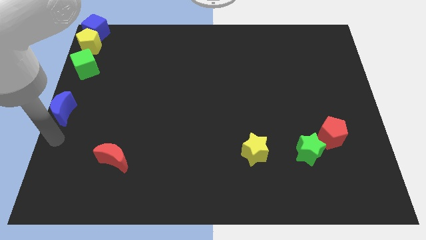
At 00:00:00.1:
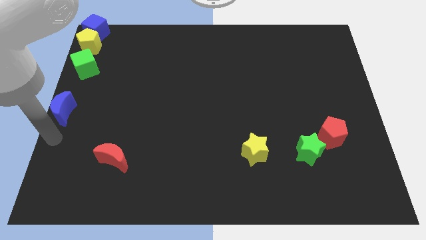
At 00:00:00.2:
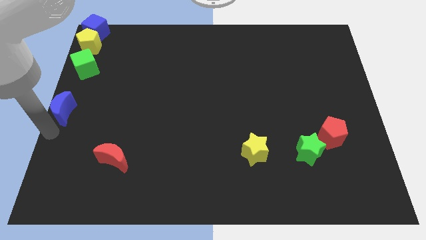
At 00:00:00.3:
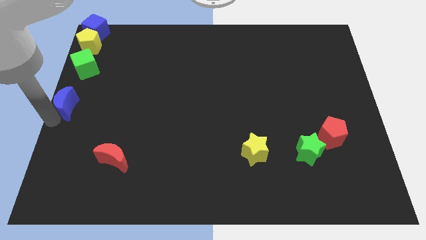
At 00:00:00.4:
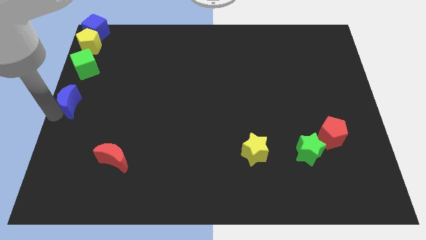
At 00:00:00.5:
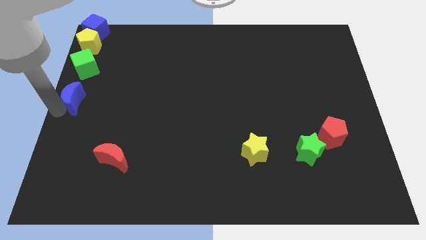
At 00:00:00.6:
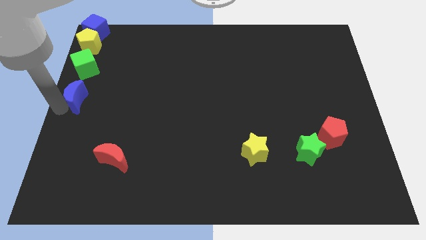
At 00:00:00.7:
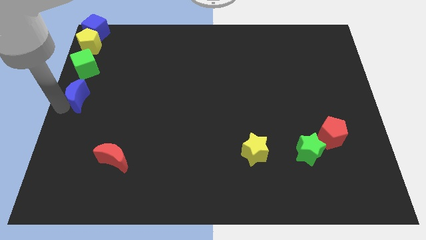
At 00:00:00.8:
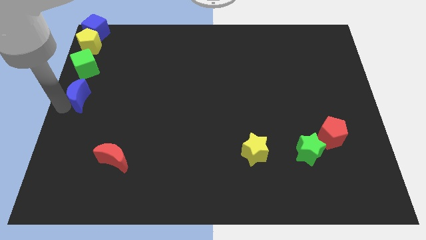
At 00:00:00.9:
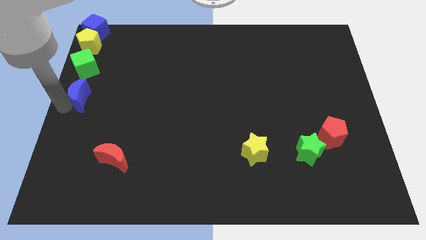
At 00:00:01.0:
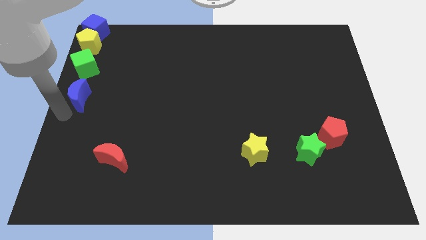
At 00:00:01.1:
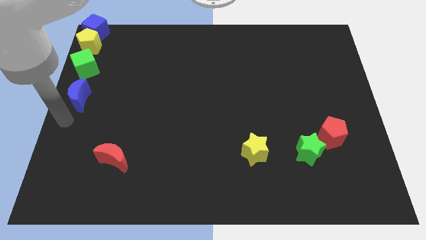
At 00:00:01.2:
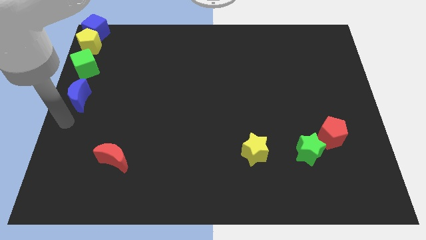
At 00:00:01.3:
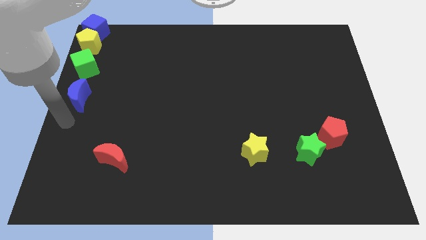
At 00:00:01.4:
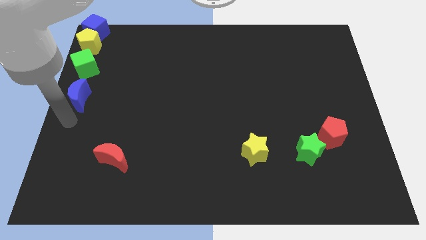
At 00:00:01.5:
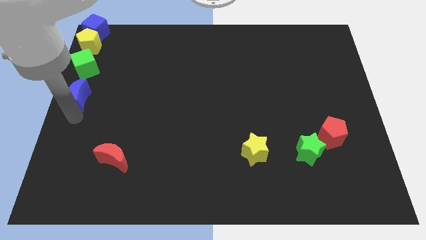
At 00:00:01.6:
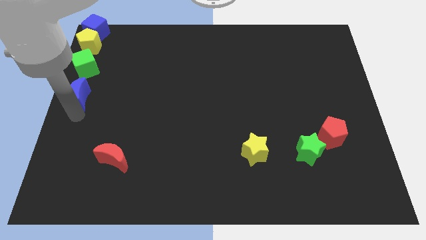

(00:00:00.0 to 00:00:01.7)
place the blue crescent below the green cube to form a vertical line

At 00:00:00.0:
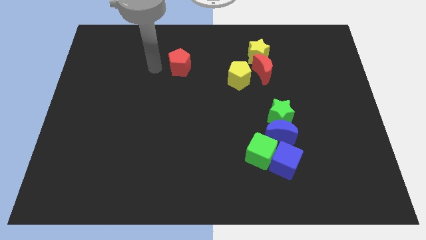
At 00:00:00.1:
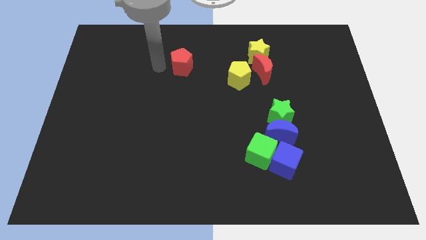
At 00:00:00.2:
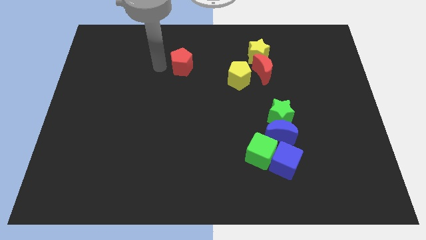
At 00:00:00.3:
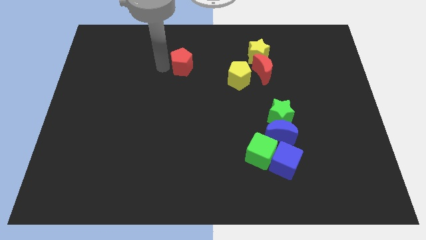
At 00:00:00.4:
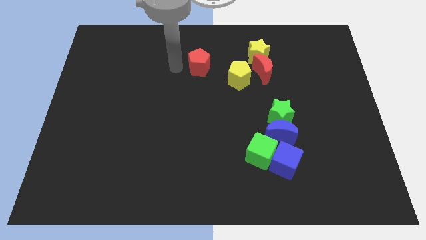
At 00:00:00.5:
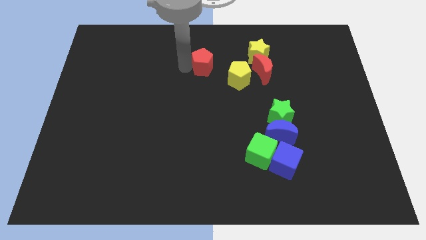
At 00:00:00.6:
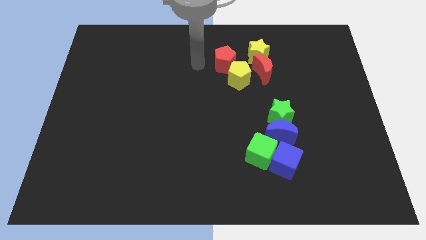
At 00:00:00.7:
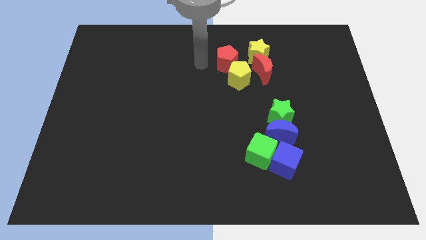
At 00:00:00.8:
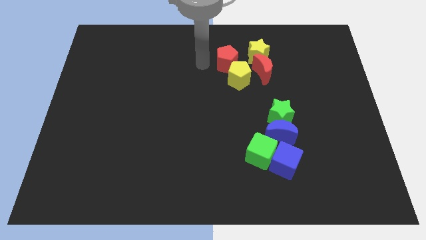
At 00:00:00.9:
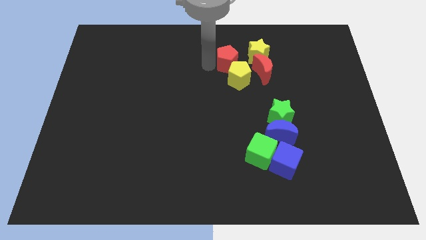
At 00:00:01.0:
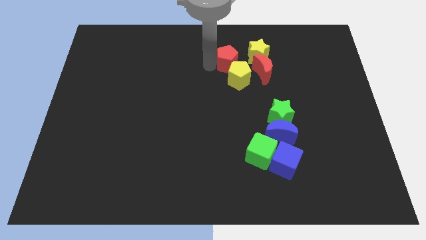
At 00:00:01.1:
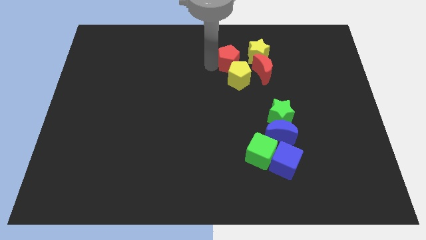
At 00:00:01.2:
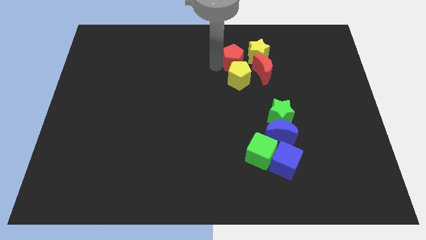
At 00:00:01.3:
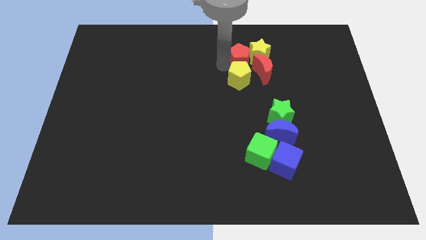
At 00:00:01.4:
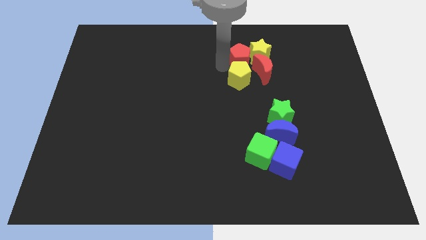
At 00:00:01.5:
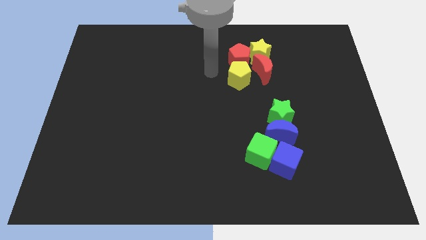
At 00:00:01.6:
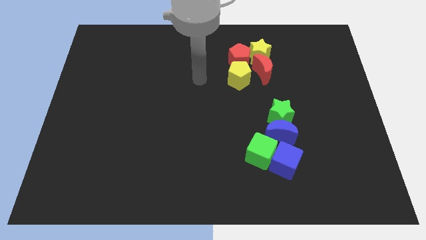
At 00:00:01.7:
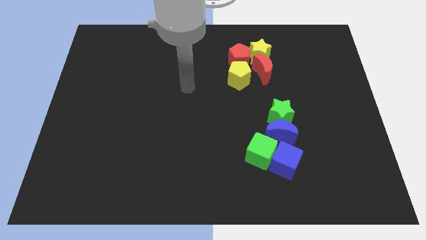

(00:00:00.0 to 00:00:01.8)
move the red pentagon to the left of the yellow star

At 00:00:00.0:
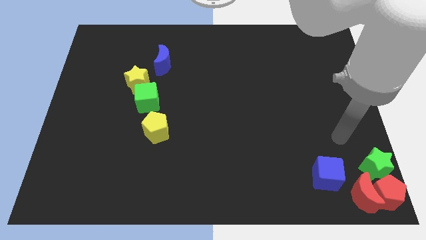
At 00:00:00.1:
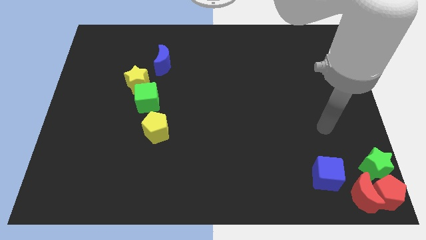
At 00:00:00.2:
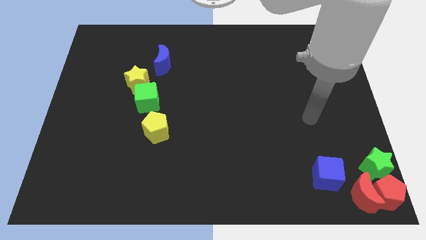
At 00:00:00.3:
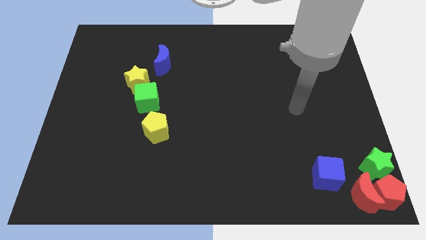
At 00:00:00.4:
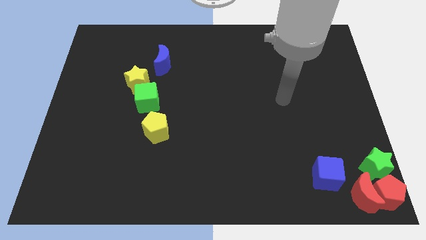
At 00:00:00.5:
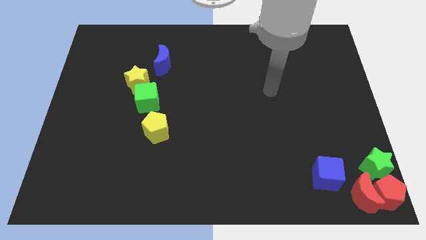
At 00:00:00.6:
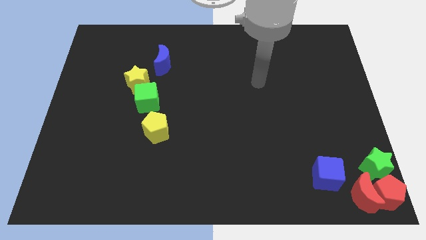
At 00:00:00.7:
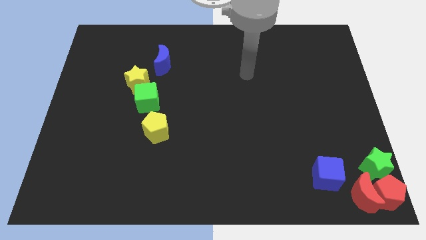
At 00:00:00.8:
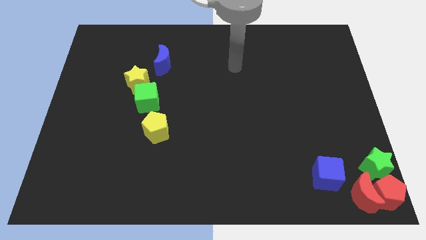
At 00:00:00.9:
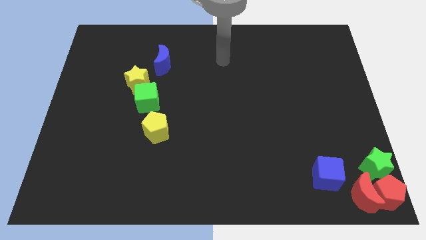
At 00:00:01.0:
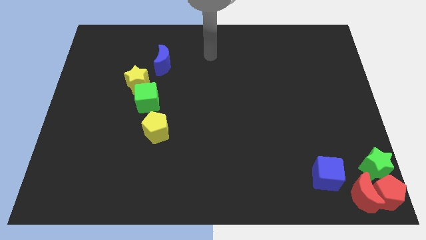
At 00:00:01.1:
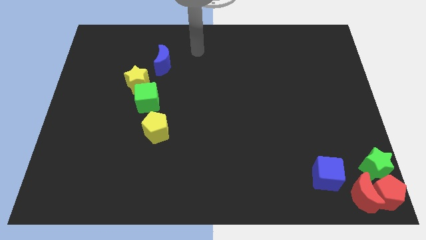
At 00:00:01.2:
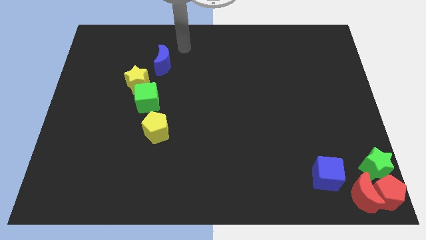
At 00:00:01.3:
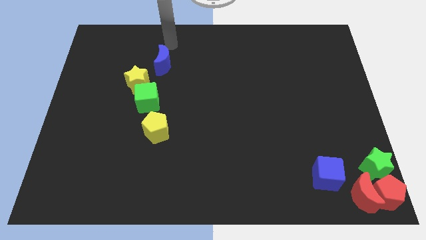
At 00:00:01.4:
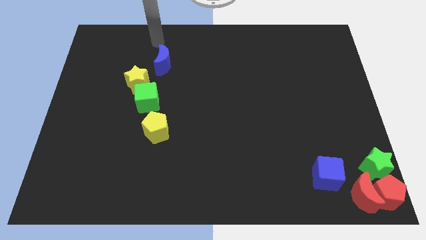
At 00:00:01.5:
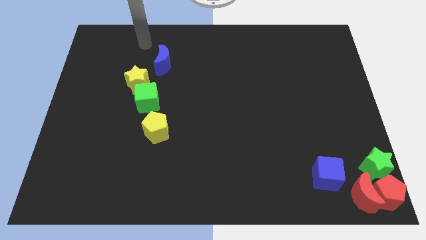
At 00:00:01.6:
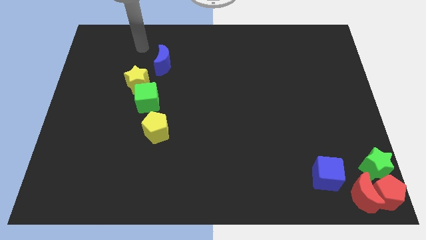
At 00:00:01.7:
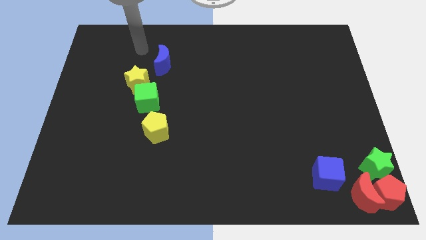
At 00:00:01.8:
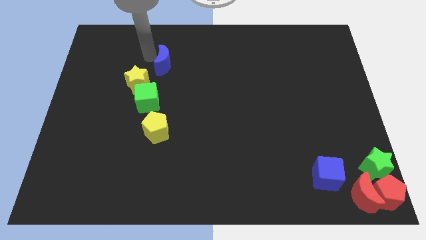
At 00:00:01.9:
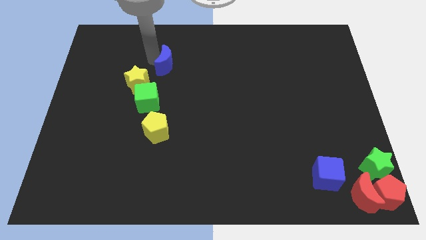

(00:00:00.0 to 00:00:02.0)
move your arm to the blue moon

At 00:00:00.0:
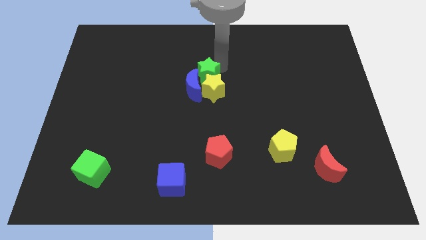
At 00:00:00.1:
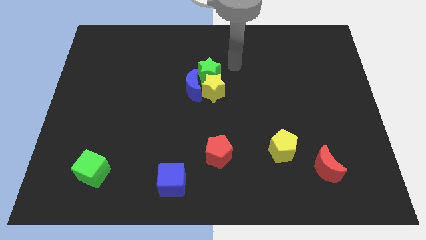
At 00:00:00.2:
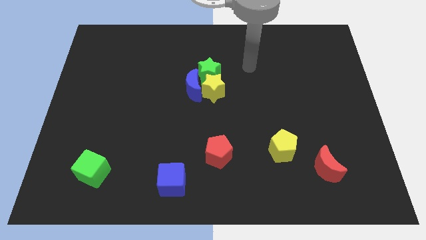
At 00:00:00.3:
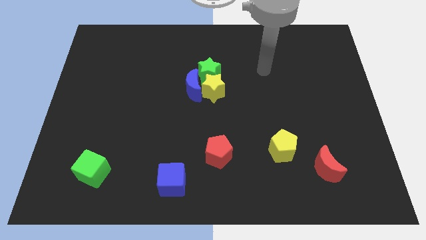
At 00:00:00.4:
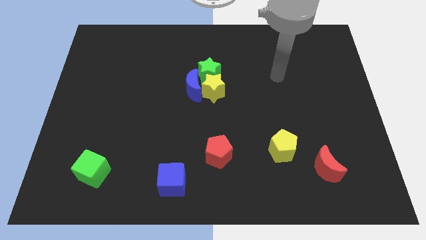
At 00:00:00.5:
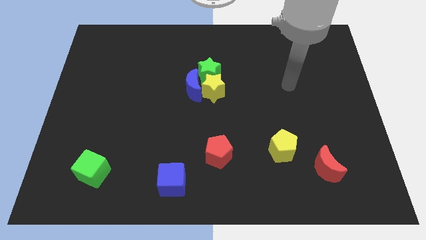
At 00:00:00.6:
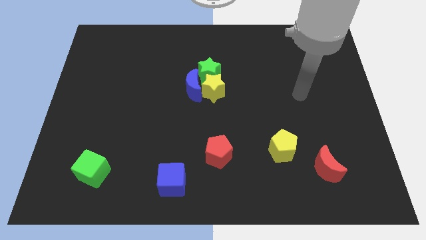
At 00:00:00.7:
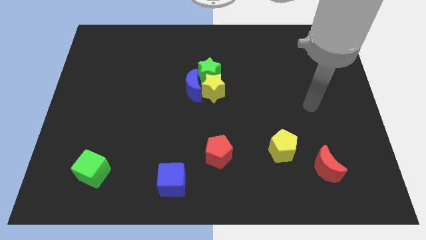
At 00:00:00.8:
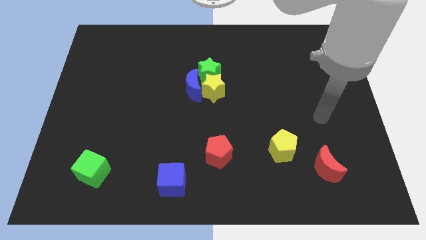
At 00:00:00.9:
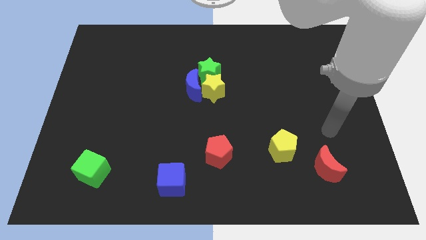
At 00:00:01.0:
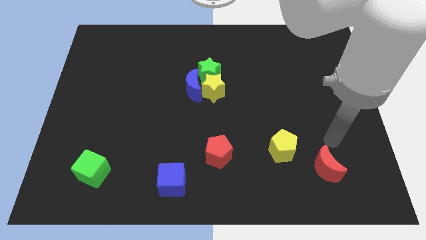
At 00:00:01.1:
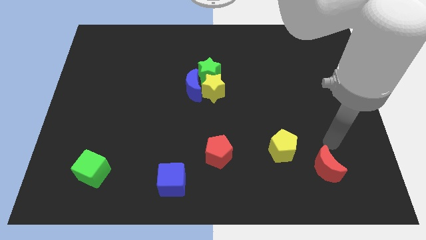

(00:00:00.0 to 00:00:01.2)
move your arm away from green star

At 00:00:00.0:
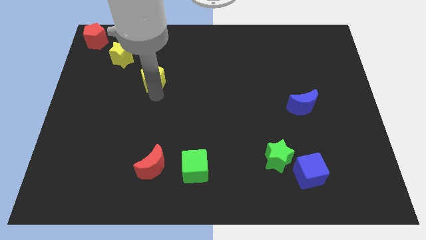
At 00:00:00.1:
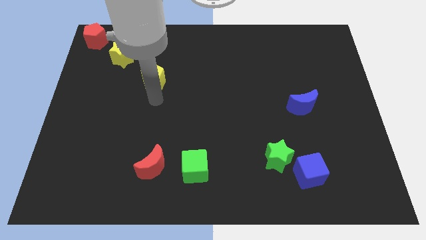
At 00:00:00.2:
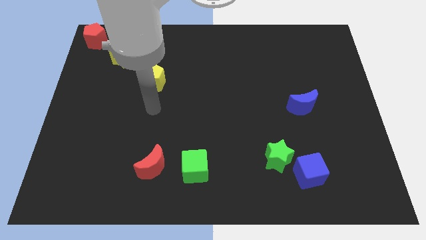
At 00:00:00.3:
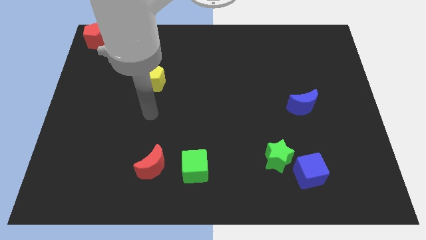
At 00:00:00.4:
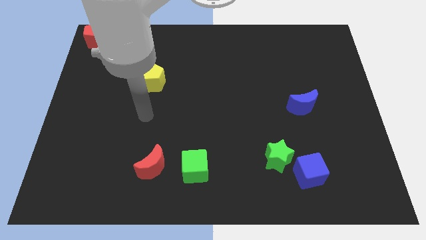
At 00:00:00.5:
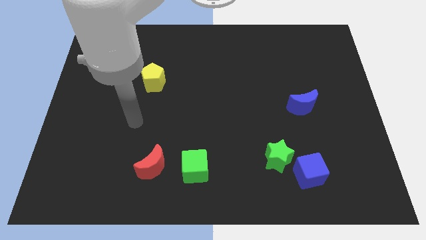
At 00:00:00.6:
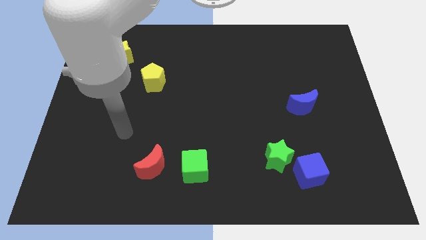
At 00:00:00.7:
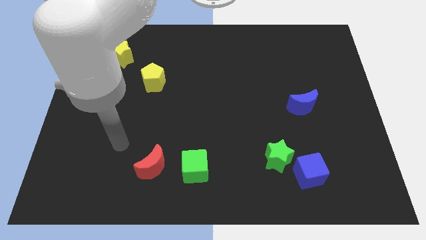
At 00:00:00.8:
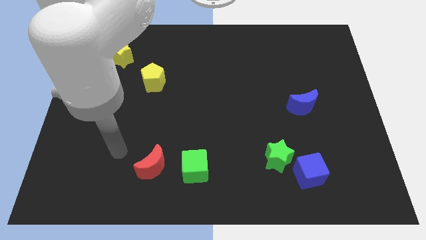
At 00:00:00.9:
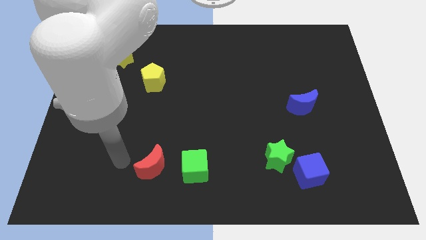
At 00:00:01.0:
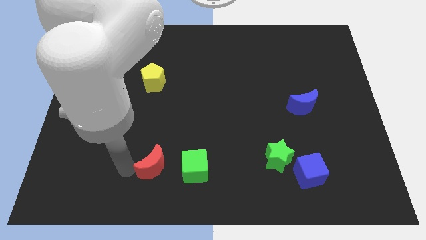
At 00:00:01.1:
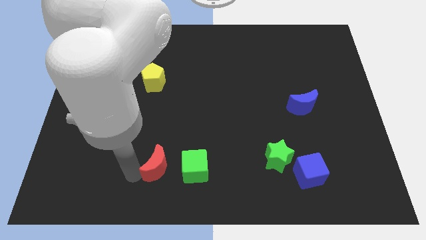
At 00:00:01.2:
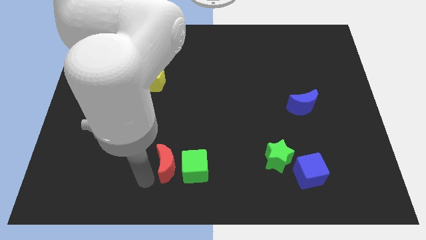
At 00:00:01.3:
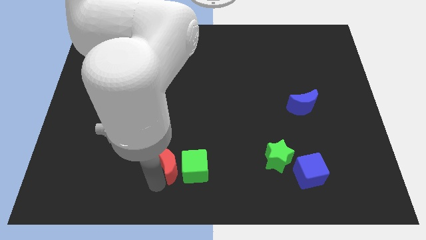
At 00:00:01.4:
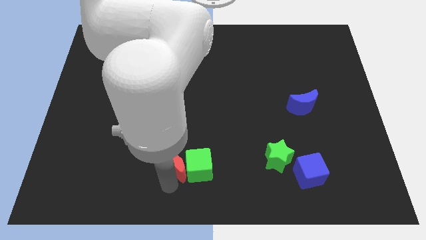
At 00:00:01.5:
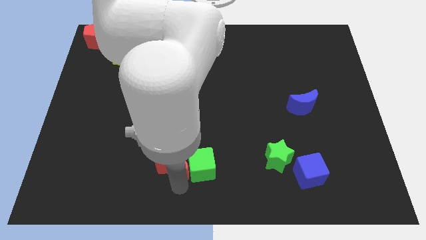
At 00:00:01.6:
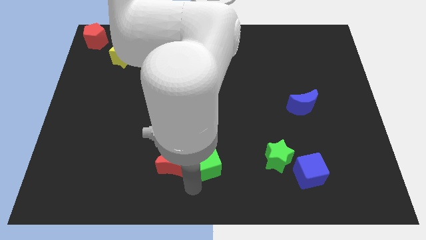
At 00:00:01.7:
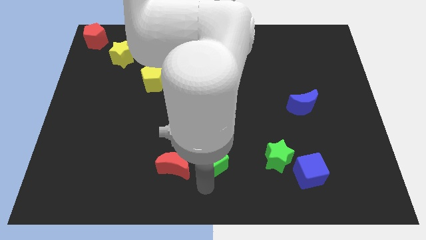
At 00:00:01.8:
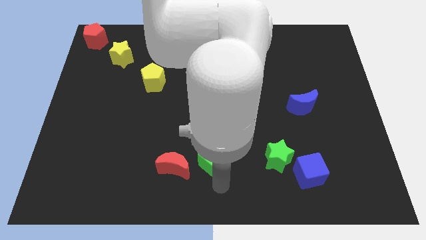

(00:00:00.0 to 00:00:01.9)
place your arm at the bottom of the green cube
